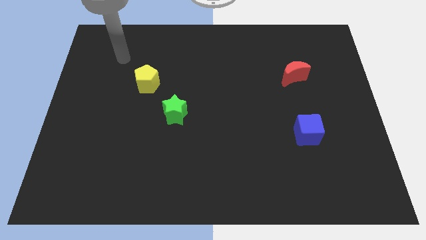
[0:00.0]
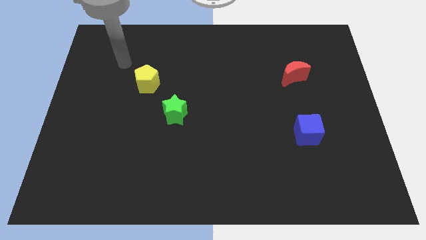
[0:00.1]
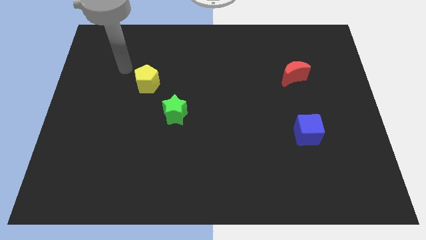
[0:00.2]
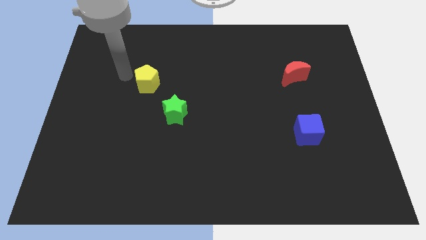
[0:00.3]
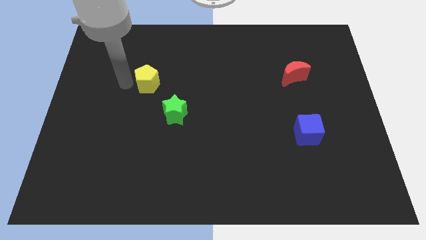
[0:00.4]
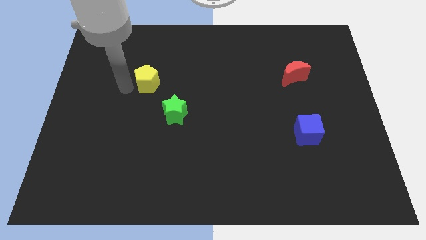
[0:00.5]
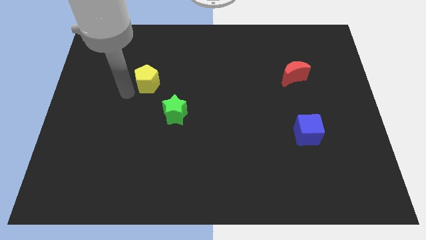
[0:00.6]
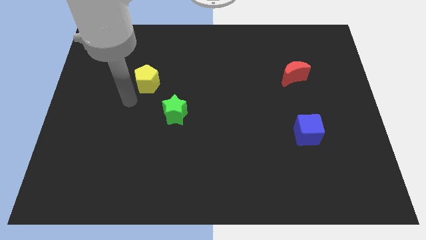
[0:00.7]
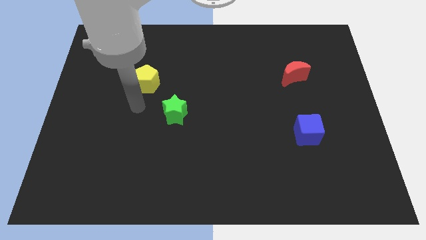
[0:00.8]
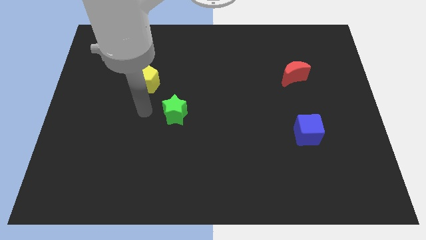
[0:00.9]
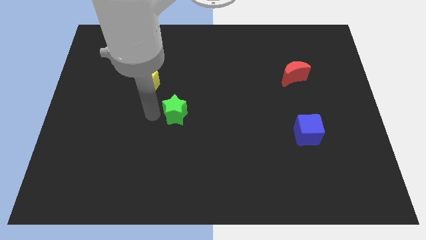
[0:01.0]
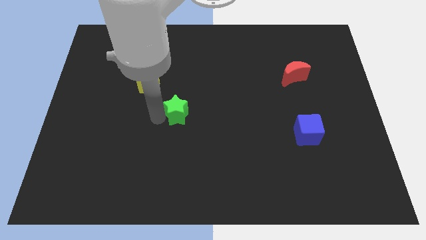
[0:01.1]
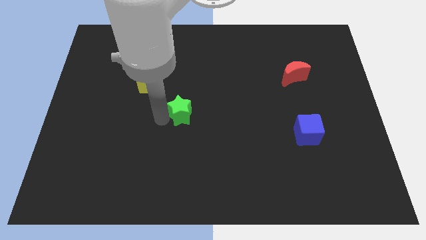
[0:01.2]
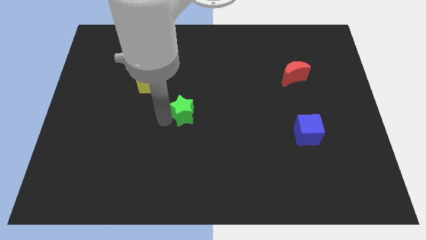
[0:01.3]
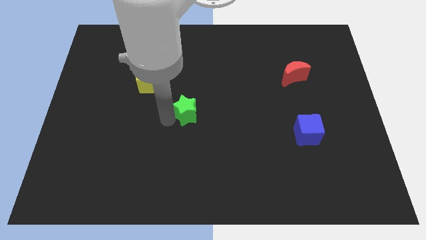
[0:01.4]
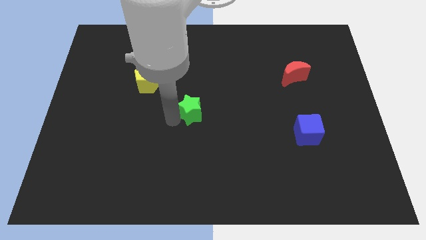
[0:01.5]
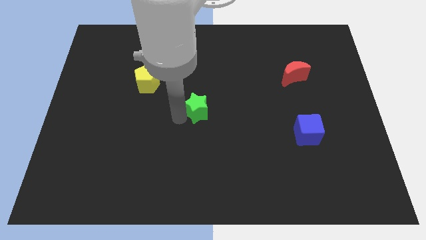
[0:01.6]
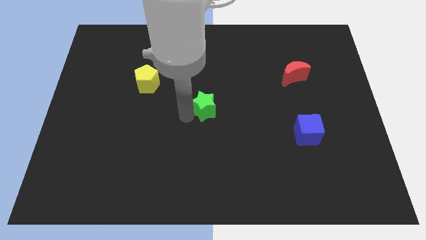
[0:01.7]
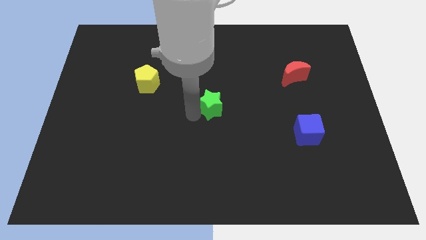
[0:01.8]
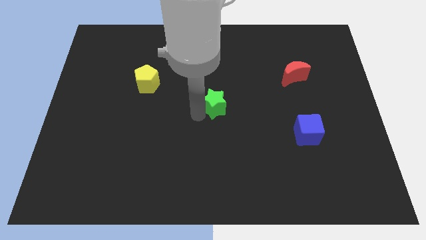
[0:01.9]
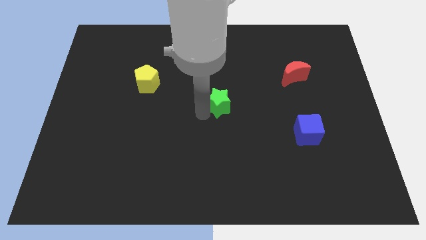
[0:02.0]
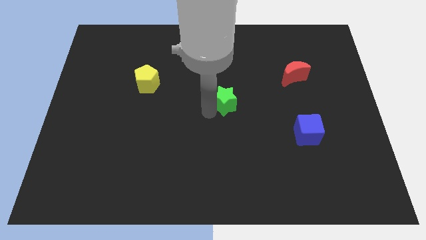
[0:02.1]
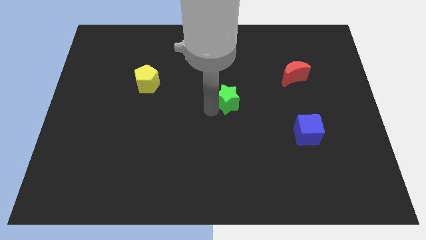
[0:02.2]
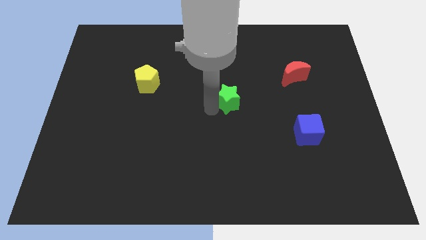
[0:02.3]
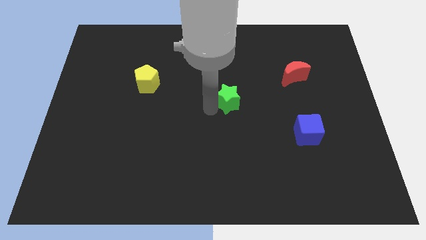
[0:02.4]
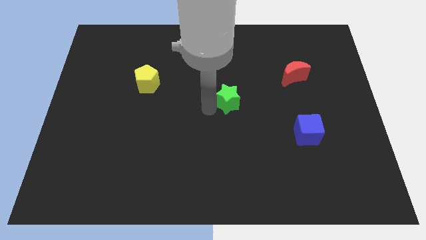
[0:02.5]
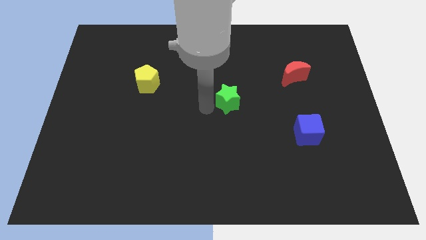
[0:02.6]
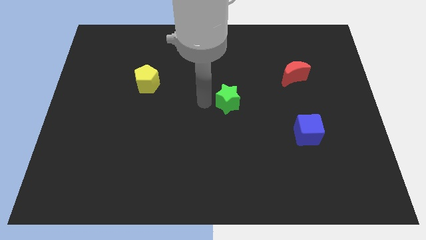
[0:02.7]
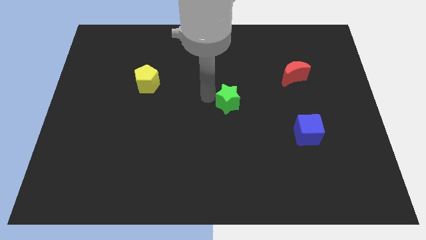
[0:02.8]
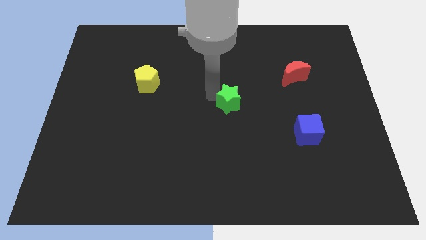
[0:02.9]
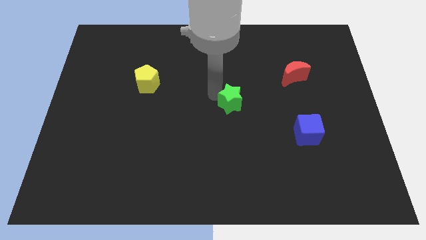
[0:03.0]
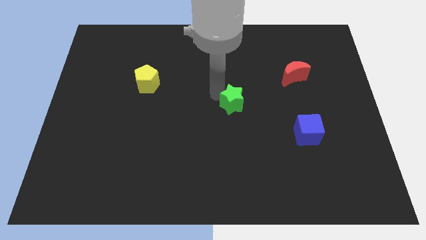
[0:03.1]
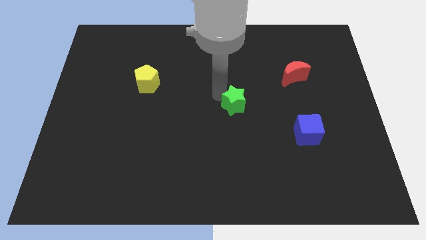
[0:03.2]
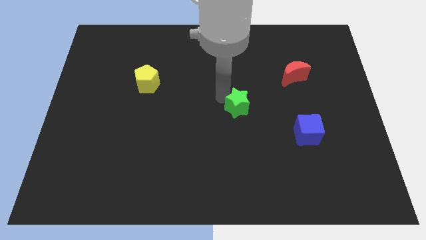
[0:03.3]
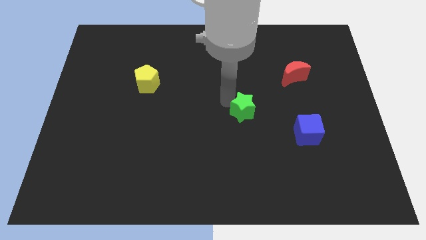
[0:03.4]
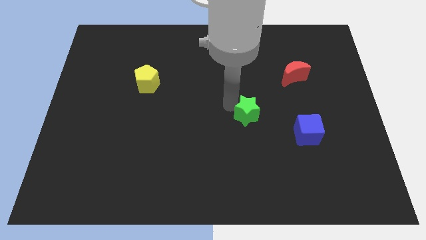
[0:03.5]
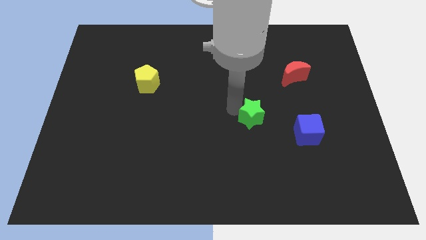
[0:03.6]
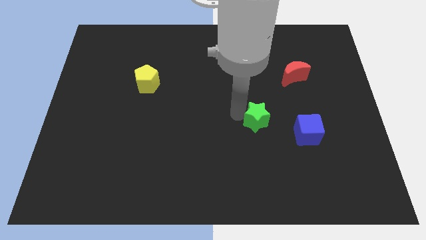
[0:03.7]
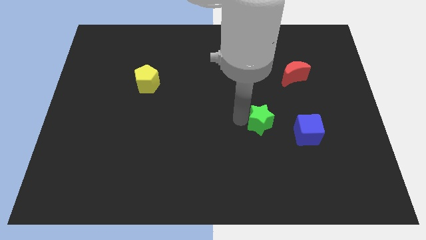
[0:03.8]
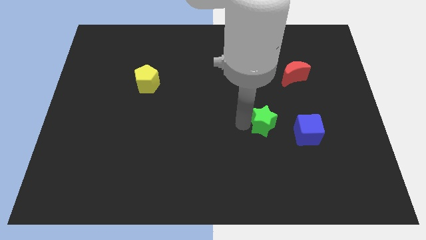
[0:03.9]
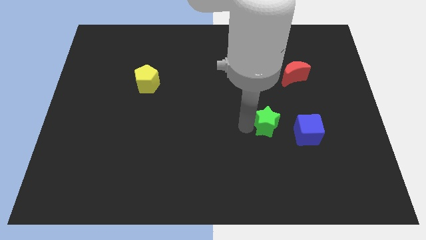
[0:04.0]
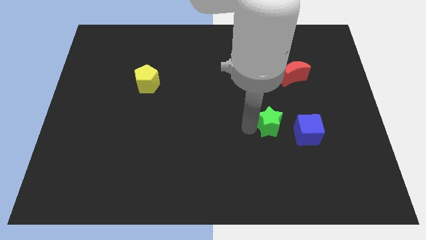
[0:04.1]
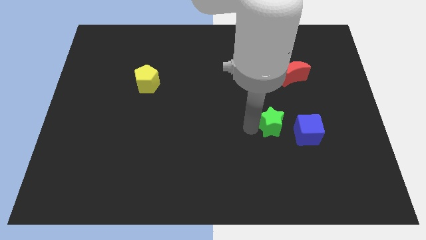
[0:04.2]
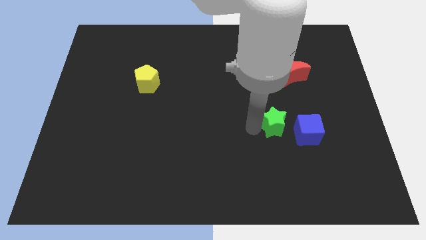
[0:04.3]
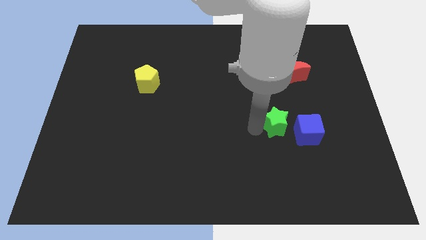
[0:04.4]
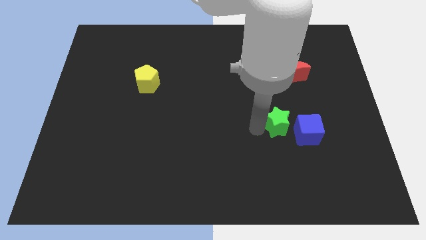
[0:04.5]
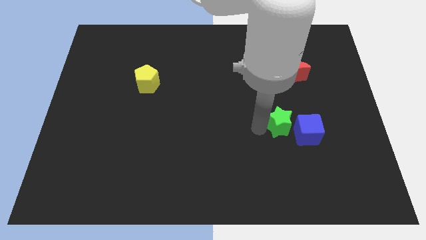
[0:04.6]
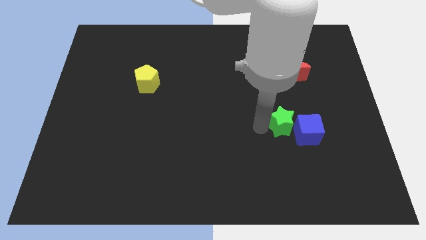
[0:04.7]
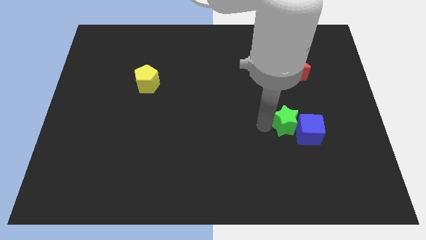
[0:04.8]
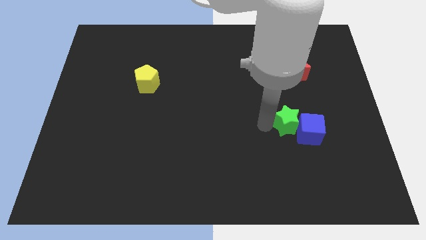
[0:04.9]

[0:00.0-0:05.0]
put the green block close to the blue cube

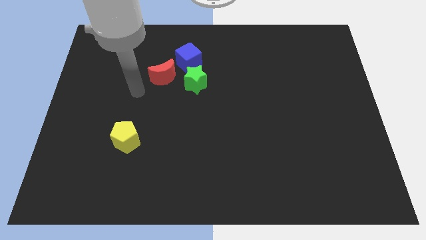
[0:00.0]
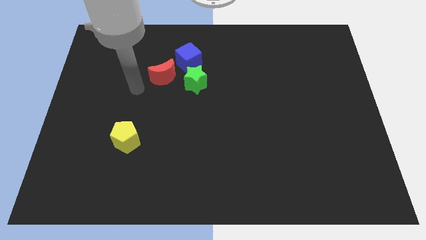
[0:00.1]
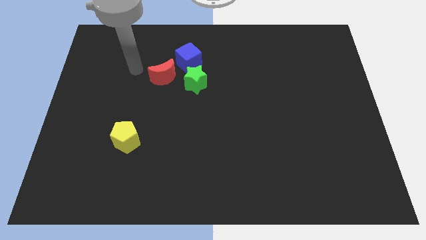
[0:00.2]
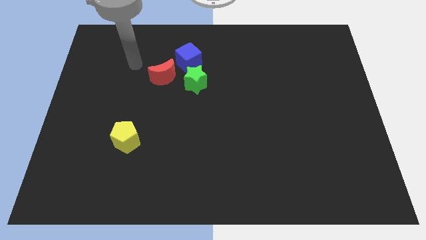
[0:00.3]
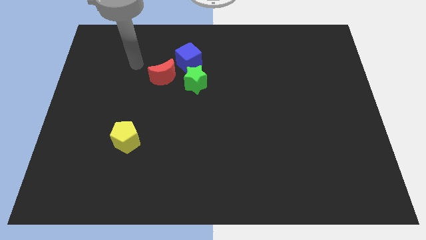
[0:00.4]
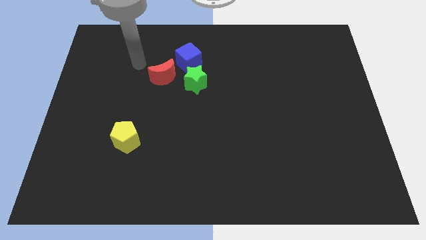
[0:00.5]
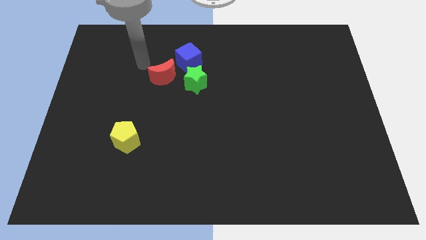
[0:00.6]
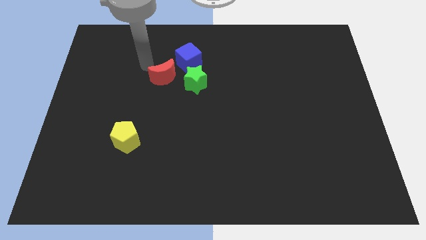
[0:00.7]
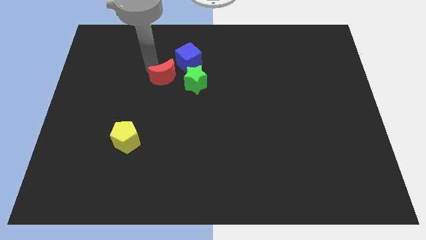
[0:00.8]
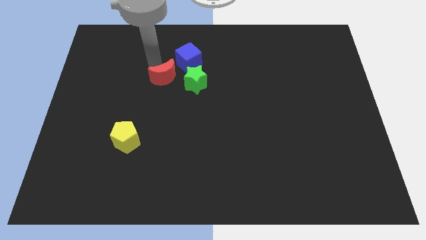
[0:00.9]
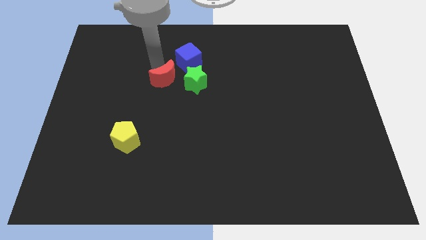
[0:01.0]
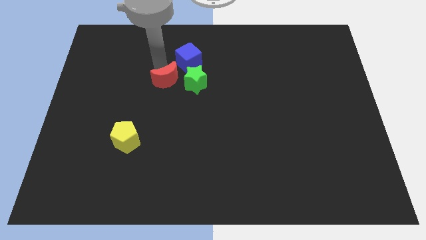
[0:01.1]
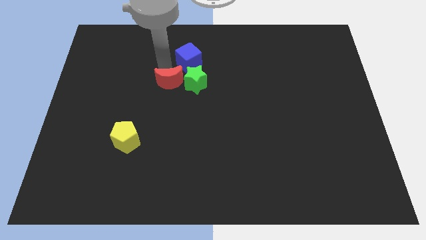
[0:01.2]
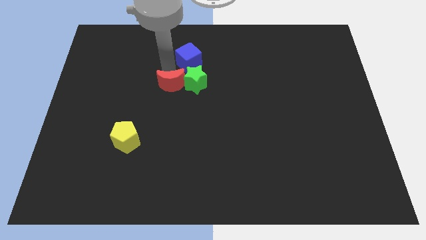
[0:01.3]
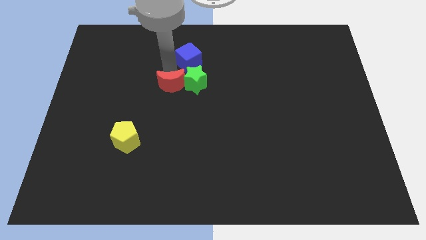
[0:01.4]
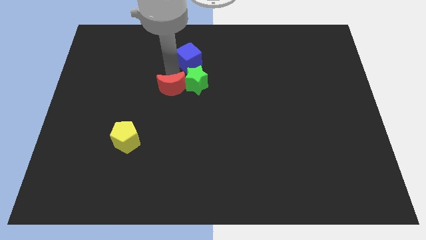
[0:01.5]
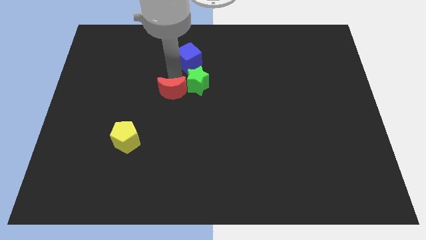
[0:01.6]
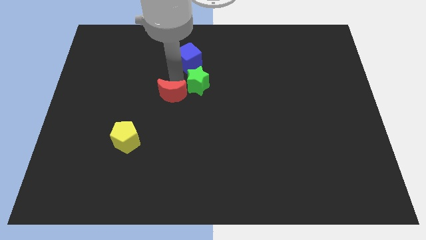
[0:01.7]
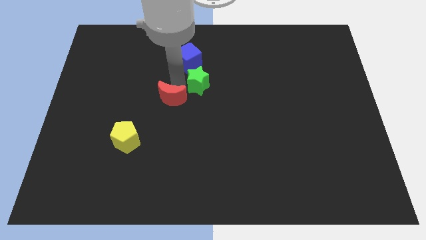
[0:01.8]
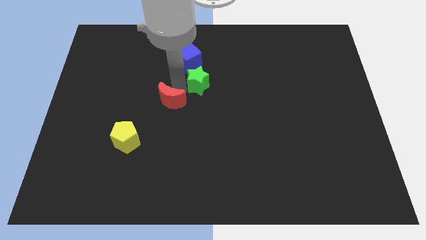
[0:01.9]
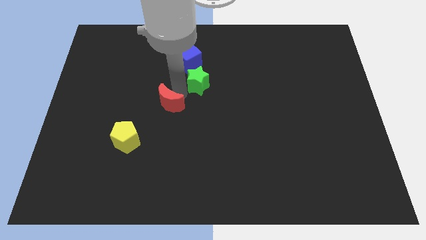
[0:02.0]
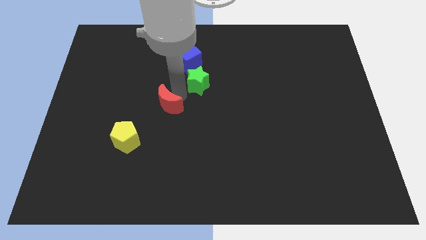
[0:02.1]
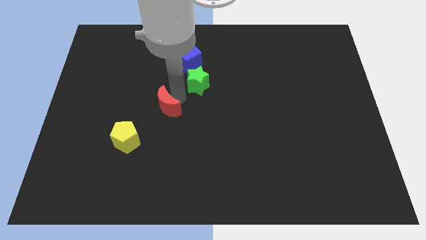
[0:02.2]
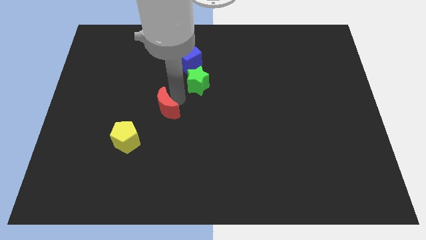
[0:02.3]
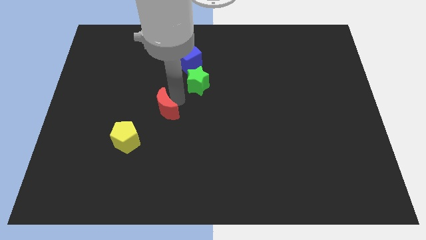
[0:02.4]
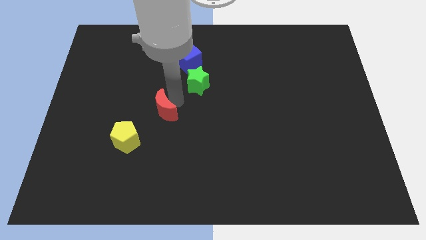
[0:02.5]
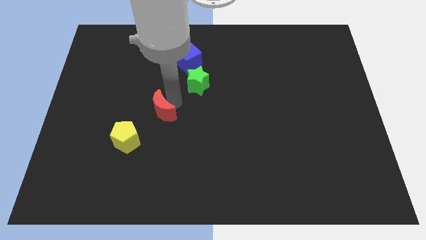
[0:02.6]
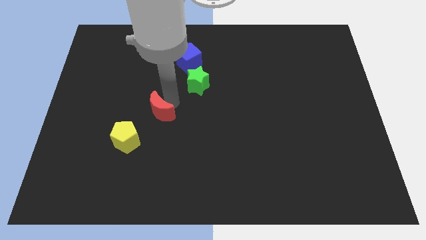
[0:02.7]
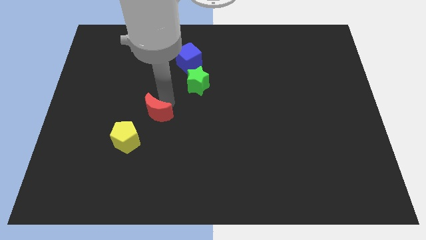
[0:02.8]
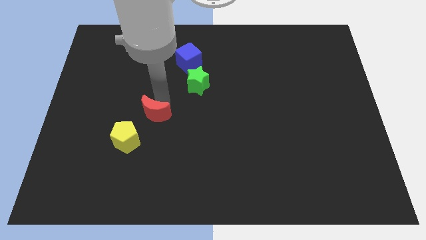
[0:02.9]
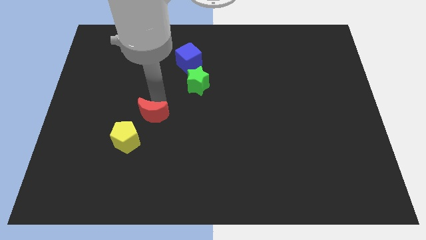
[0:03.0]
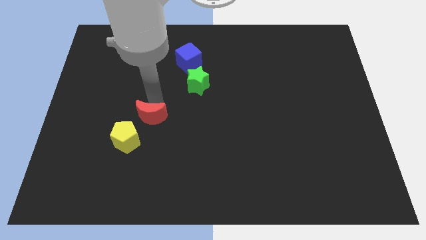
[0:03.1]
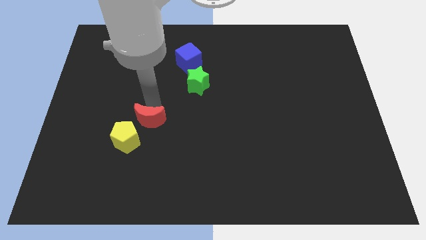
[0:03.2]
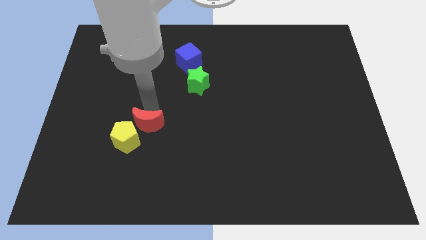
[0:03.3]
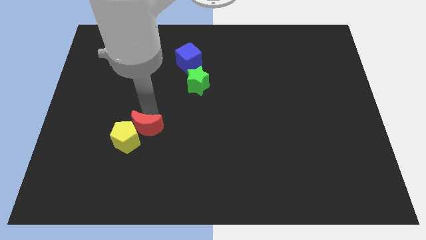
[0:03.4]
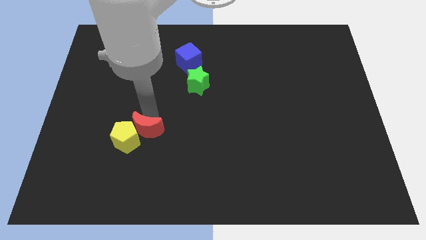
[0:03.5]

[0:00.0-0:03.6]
slide the red moon close to the yellow pentagon
